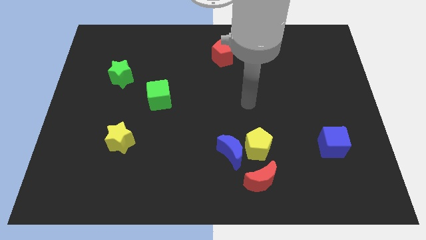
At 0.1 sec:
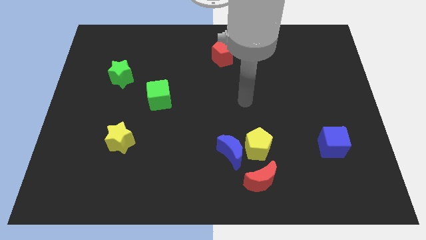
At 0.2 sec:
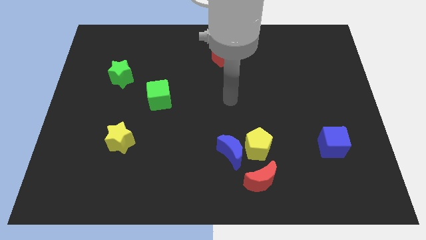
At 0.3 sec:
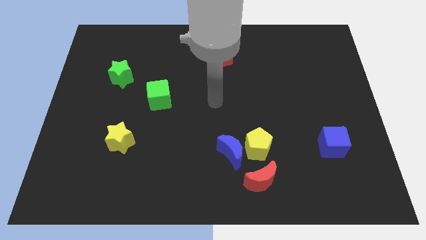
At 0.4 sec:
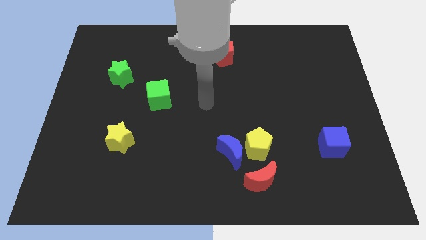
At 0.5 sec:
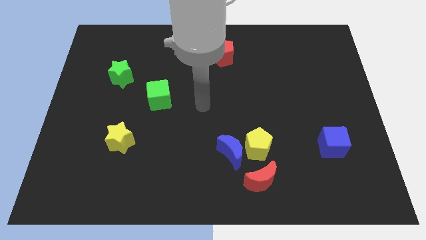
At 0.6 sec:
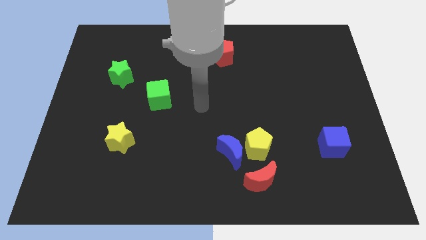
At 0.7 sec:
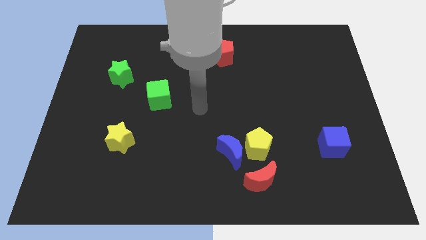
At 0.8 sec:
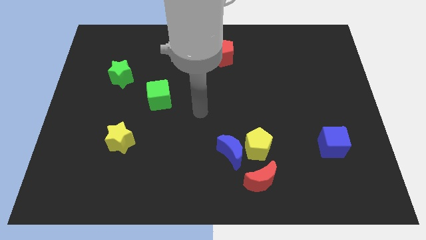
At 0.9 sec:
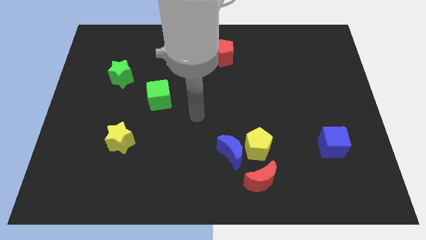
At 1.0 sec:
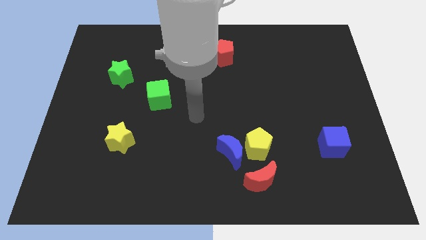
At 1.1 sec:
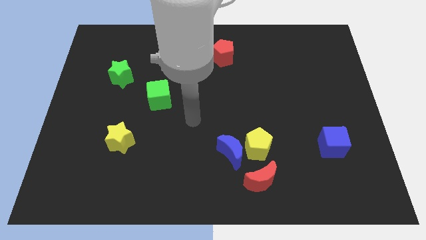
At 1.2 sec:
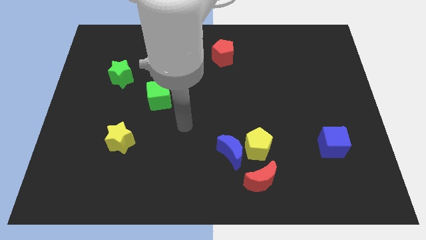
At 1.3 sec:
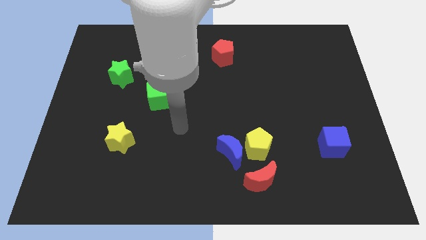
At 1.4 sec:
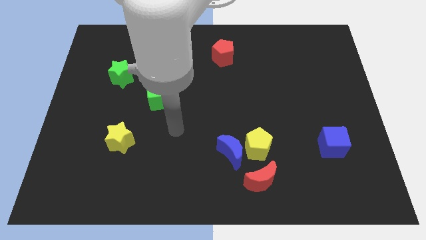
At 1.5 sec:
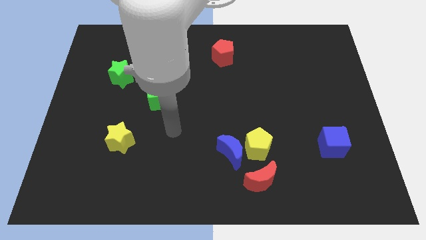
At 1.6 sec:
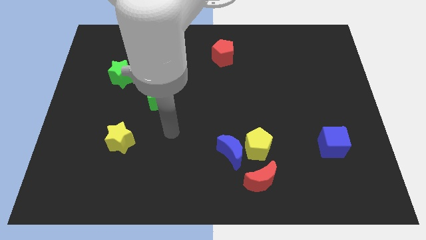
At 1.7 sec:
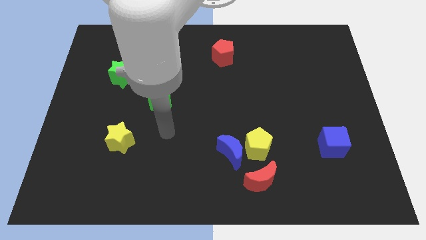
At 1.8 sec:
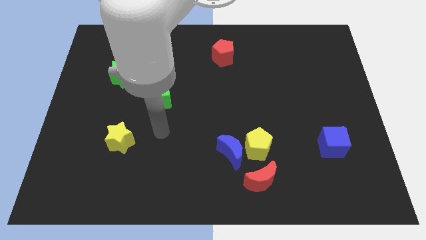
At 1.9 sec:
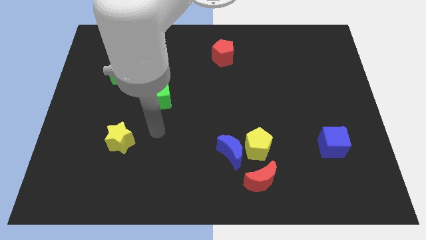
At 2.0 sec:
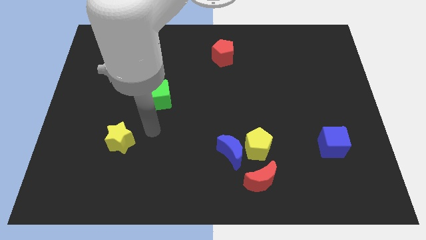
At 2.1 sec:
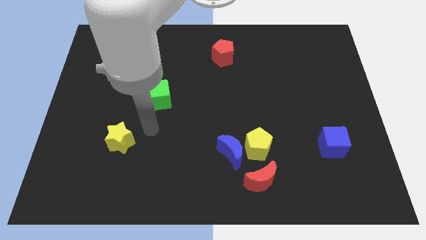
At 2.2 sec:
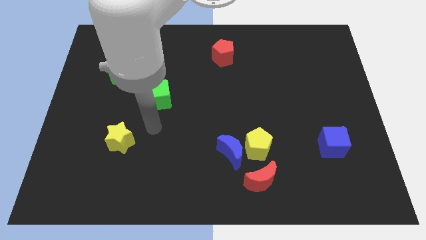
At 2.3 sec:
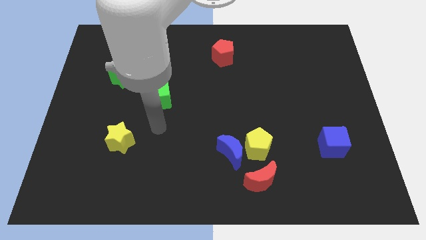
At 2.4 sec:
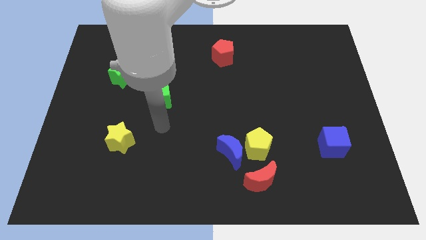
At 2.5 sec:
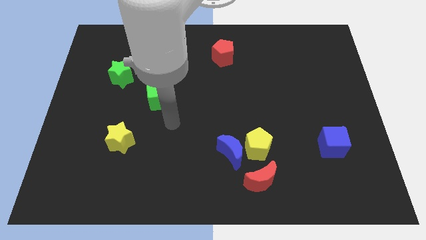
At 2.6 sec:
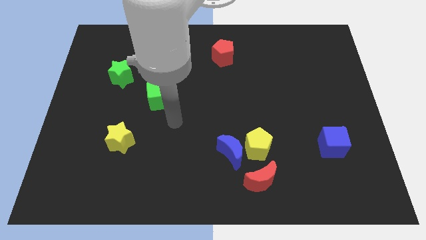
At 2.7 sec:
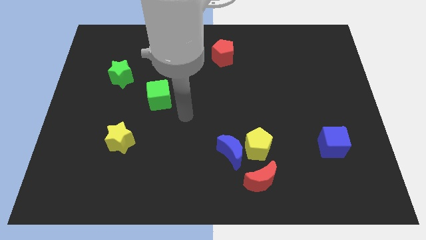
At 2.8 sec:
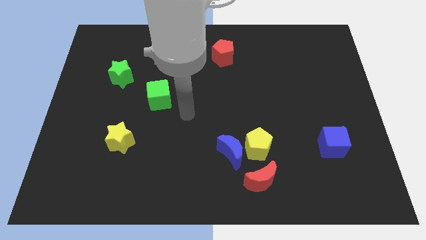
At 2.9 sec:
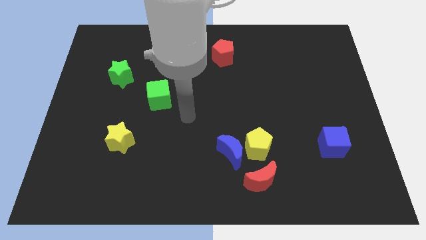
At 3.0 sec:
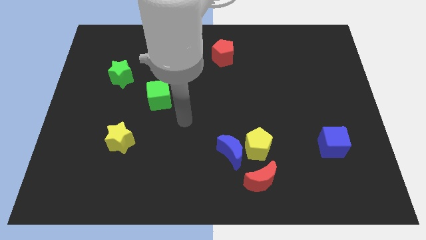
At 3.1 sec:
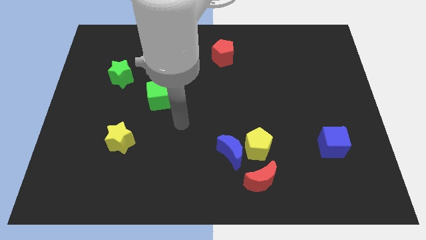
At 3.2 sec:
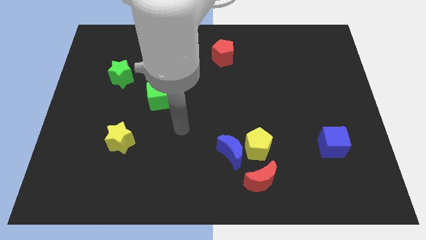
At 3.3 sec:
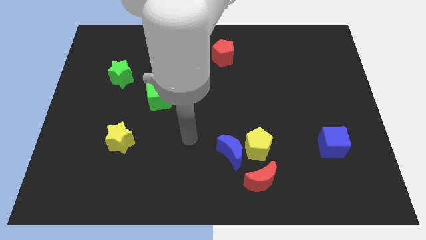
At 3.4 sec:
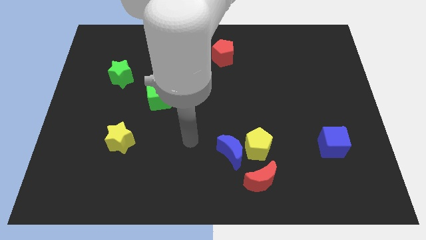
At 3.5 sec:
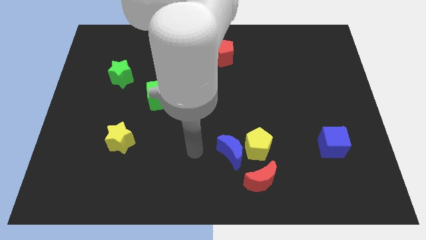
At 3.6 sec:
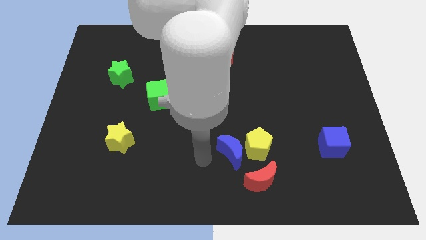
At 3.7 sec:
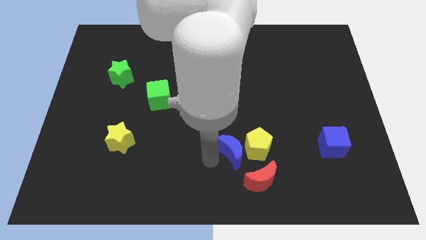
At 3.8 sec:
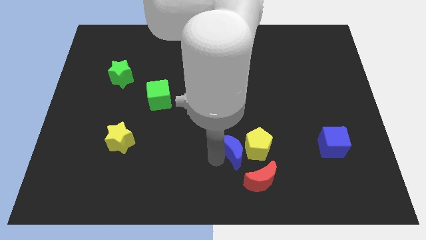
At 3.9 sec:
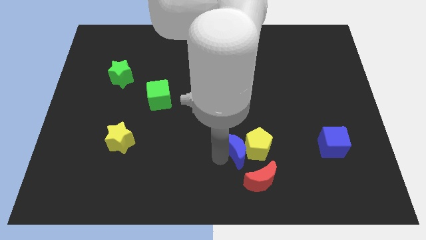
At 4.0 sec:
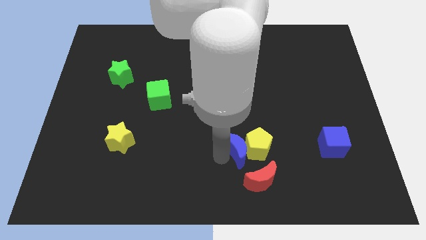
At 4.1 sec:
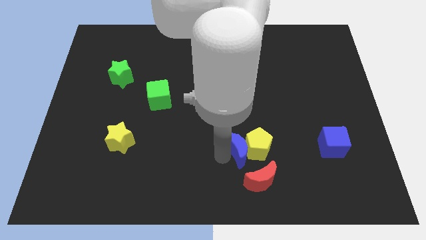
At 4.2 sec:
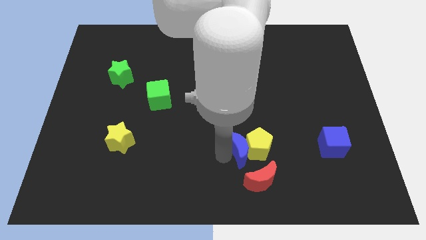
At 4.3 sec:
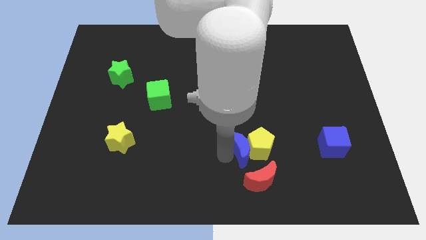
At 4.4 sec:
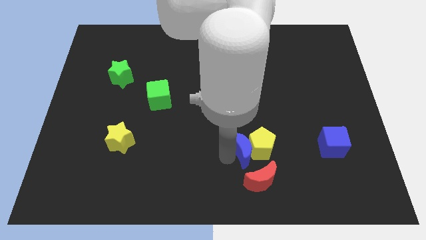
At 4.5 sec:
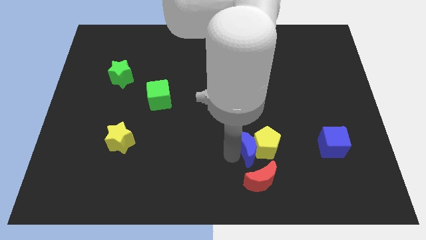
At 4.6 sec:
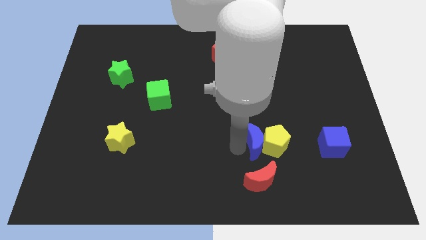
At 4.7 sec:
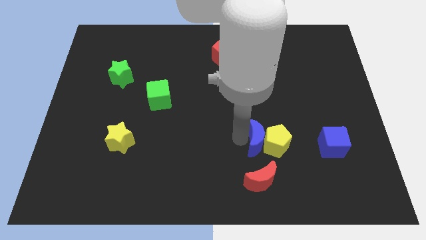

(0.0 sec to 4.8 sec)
push both the blue moon and the yellow pentagon at a time towards the right side

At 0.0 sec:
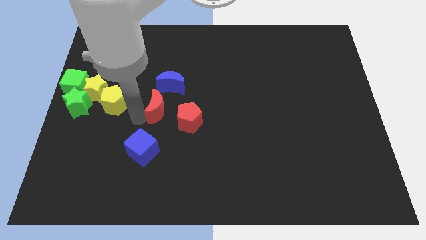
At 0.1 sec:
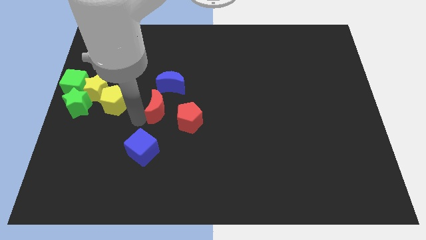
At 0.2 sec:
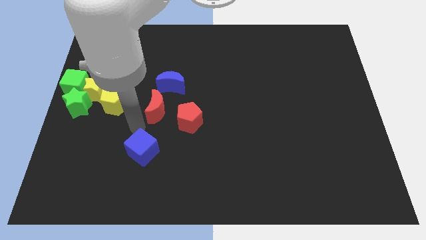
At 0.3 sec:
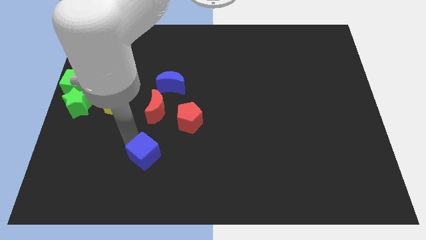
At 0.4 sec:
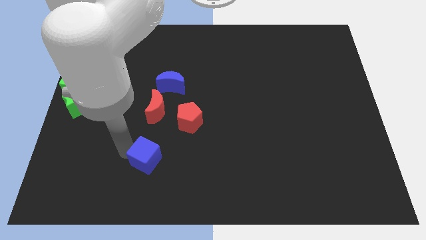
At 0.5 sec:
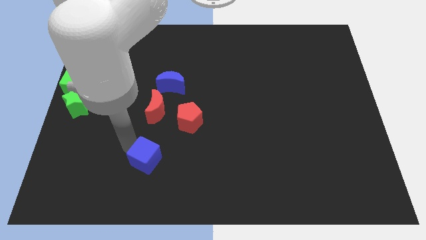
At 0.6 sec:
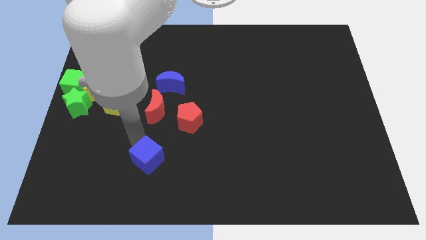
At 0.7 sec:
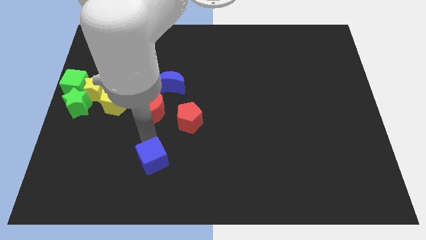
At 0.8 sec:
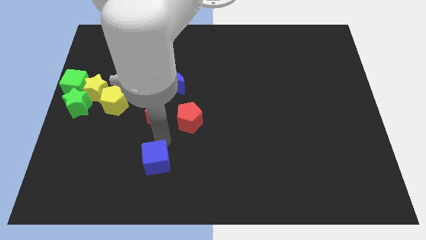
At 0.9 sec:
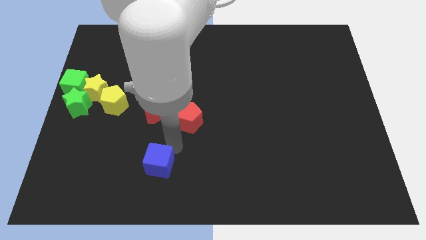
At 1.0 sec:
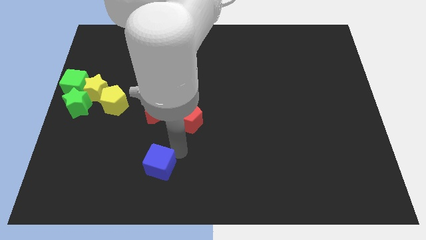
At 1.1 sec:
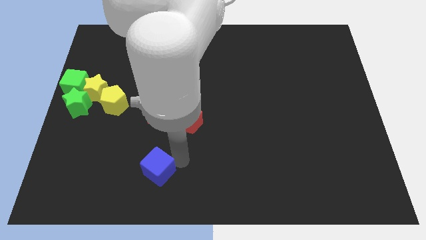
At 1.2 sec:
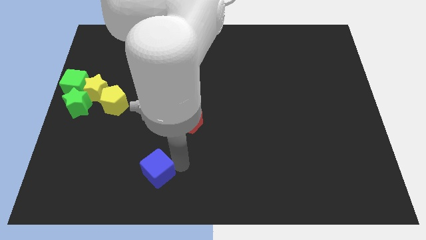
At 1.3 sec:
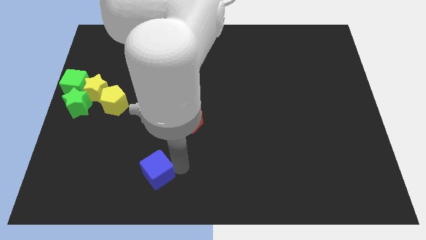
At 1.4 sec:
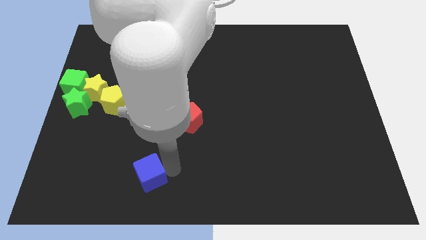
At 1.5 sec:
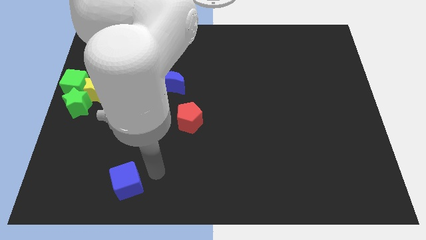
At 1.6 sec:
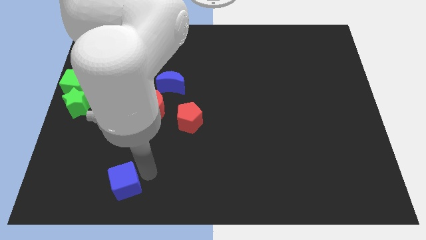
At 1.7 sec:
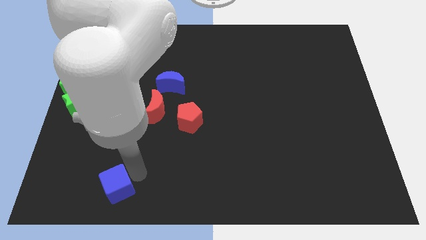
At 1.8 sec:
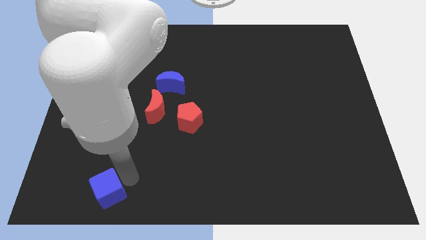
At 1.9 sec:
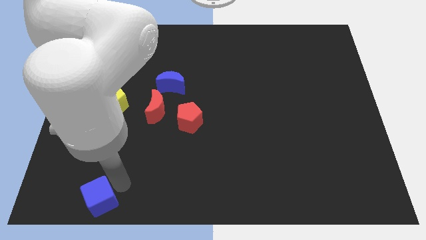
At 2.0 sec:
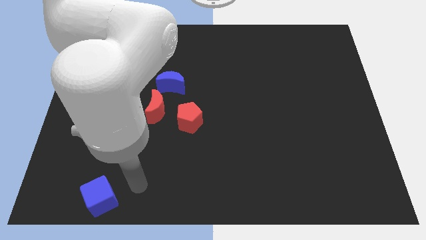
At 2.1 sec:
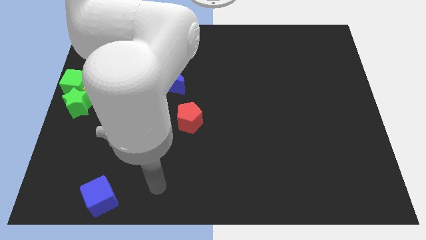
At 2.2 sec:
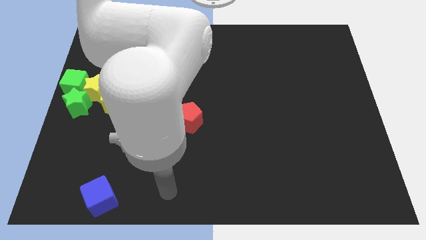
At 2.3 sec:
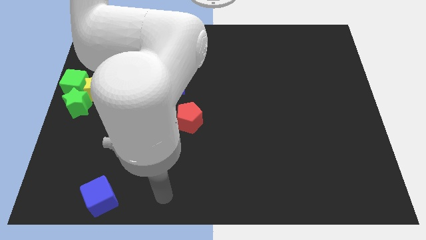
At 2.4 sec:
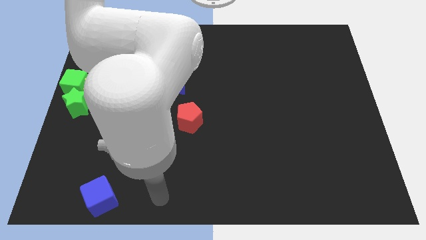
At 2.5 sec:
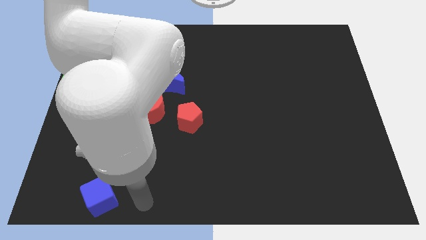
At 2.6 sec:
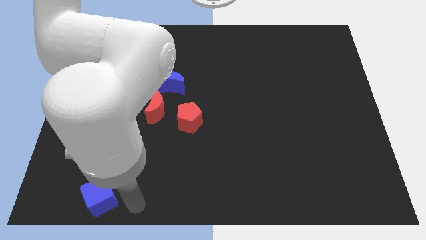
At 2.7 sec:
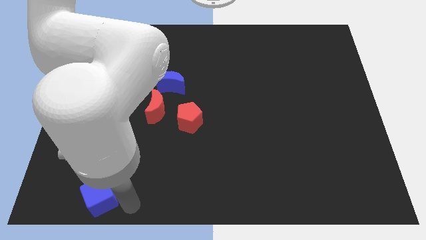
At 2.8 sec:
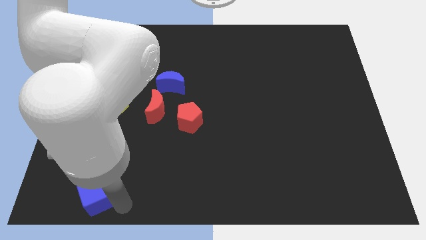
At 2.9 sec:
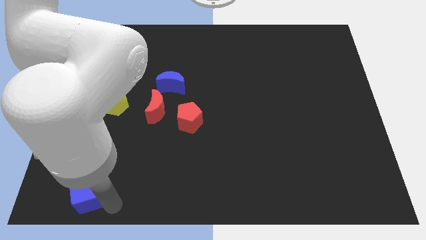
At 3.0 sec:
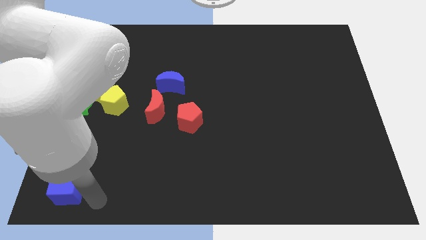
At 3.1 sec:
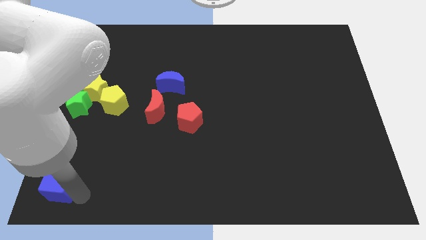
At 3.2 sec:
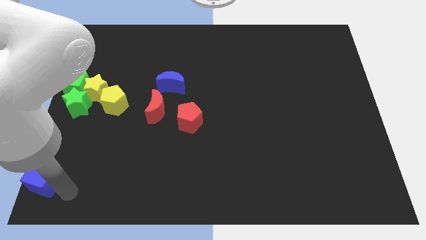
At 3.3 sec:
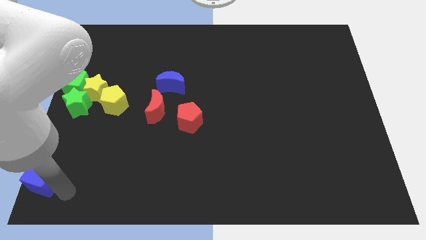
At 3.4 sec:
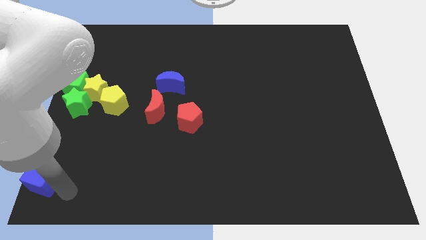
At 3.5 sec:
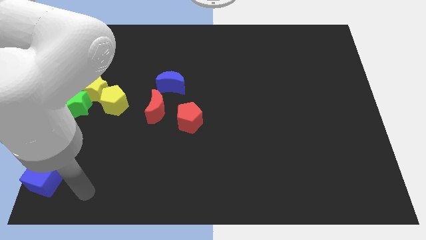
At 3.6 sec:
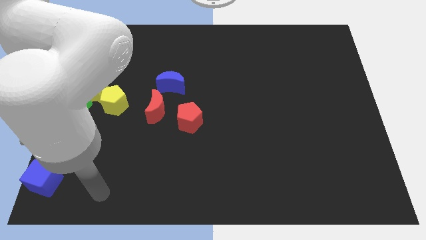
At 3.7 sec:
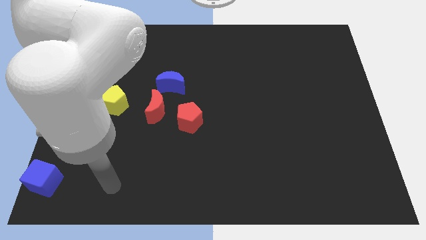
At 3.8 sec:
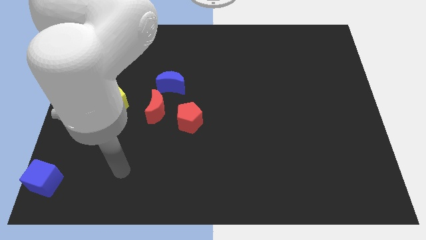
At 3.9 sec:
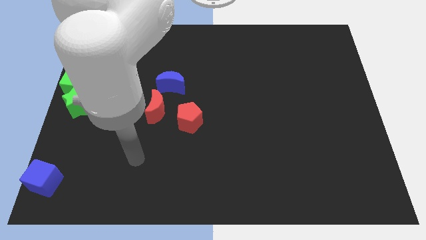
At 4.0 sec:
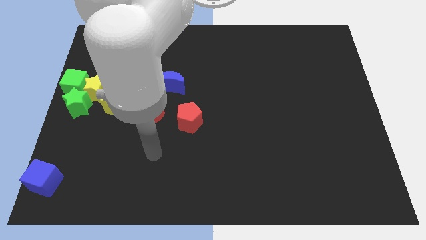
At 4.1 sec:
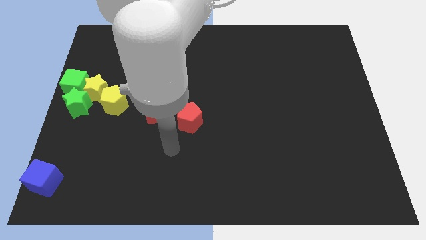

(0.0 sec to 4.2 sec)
place the blue cube at the bottom left corner of the board
